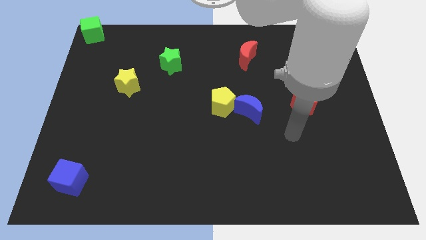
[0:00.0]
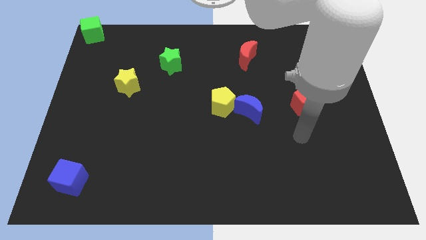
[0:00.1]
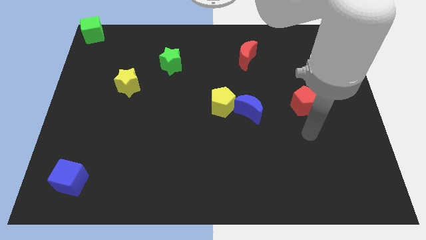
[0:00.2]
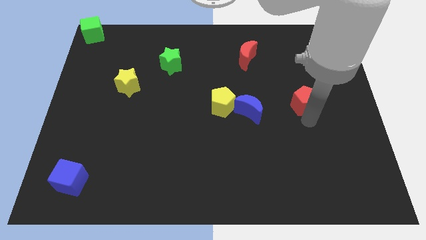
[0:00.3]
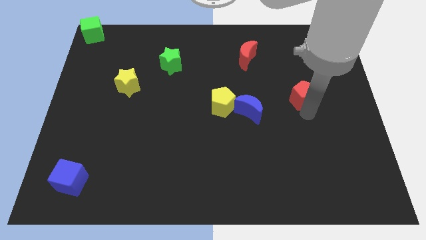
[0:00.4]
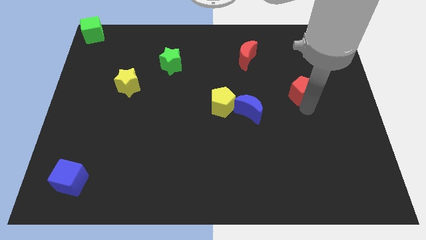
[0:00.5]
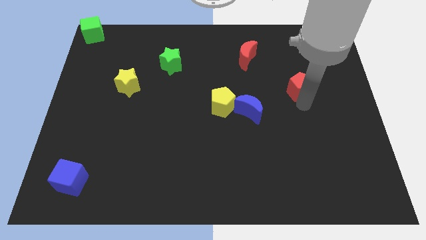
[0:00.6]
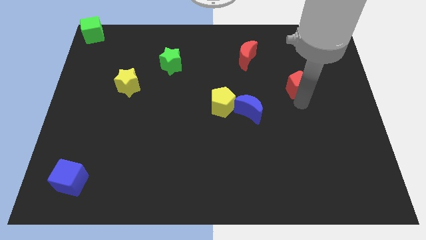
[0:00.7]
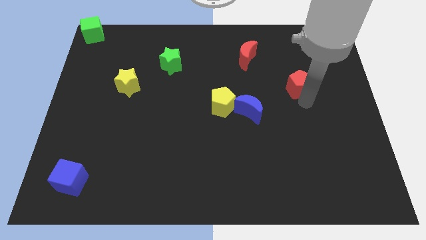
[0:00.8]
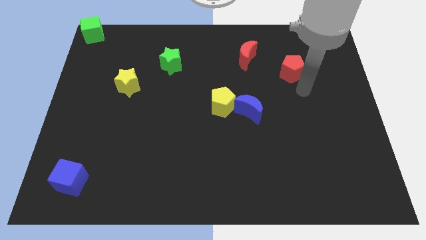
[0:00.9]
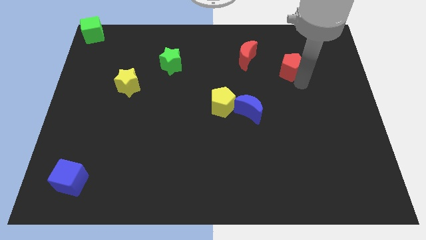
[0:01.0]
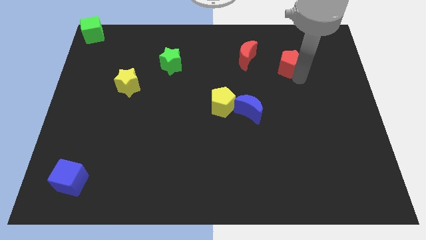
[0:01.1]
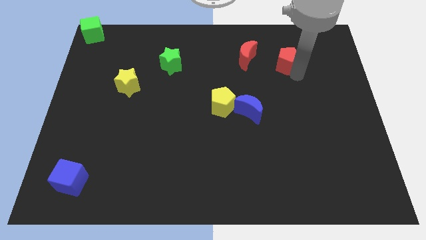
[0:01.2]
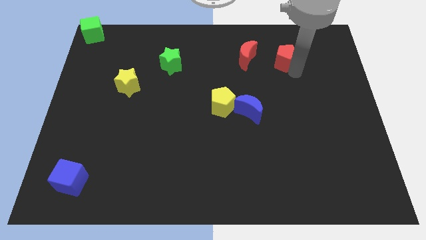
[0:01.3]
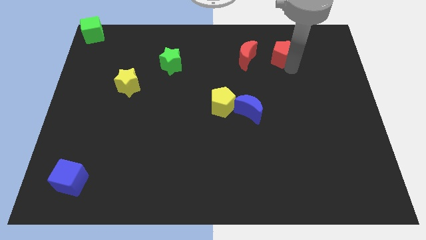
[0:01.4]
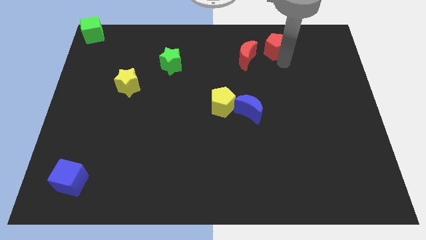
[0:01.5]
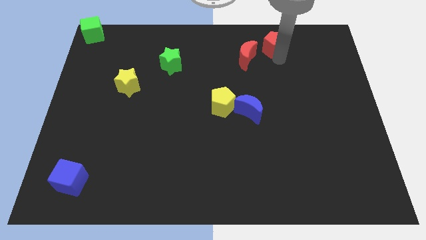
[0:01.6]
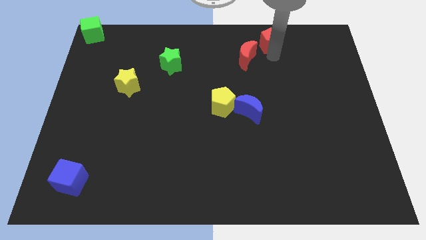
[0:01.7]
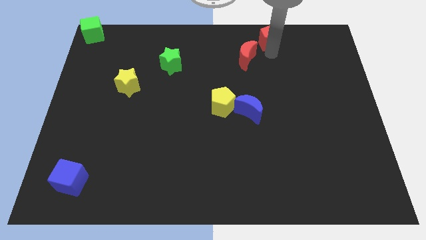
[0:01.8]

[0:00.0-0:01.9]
push the red pentagon towards the top right side of the red crescent

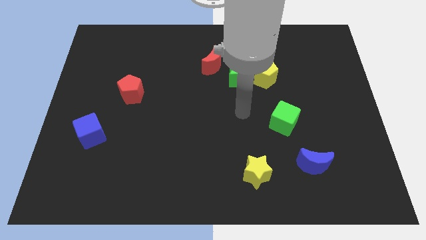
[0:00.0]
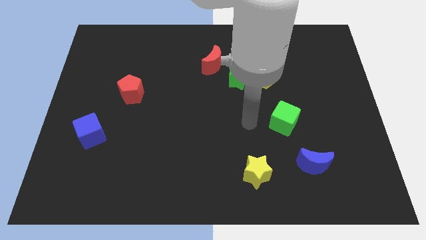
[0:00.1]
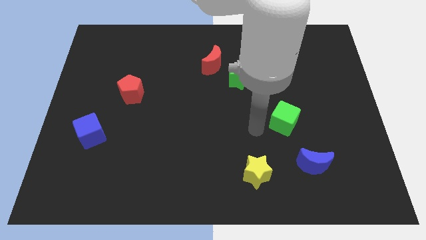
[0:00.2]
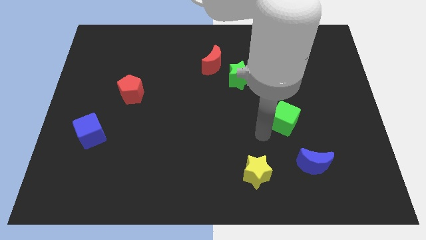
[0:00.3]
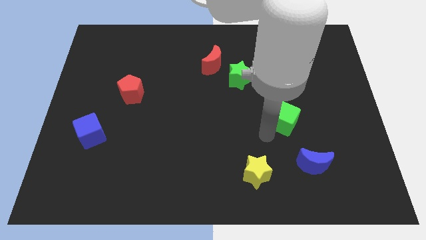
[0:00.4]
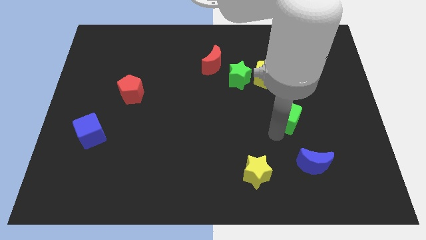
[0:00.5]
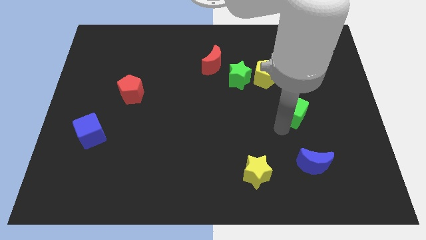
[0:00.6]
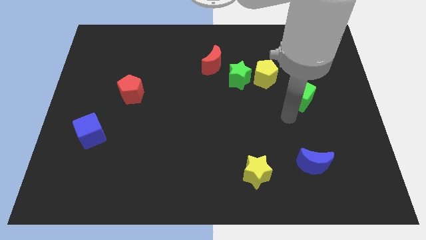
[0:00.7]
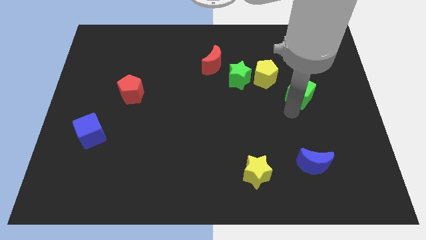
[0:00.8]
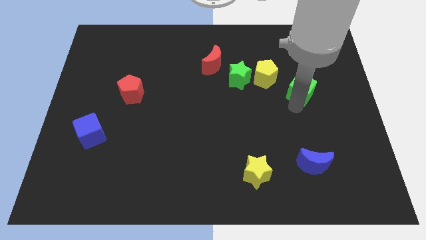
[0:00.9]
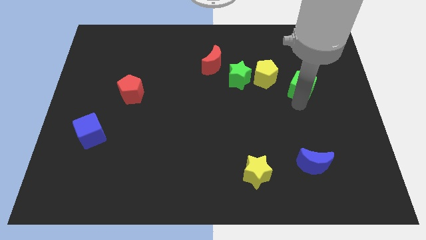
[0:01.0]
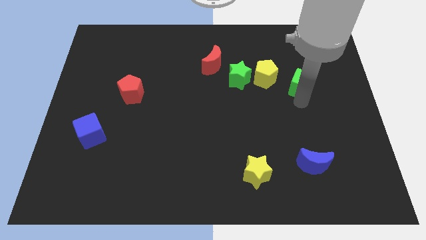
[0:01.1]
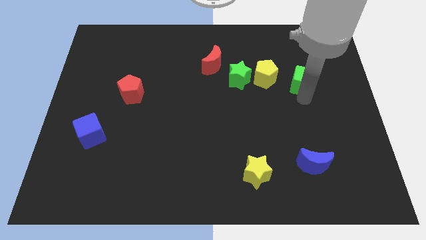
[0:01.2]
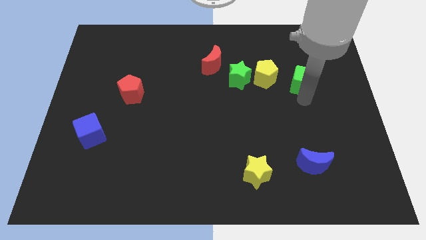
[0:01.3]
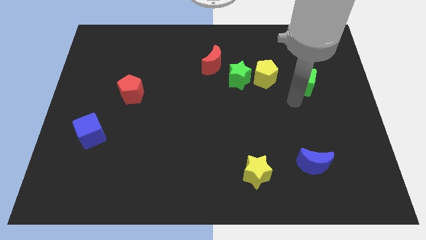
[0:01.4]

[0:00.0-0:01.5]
push the green cube upwards

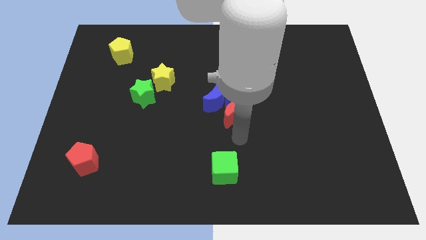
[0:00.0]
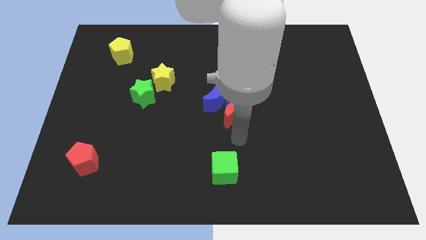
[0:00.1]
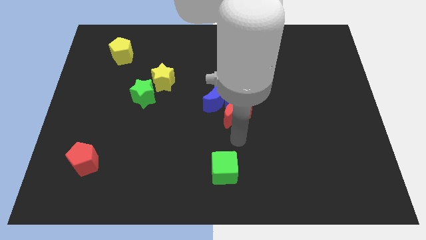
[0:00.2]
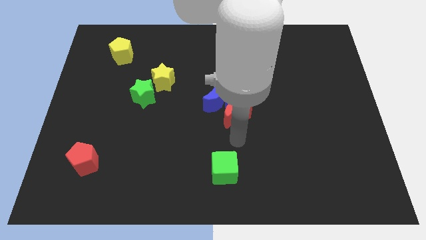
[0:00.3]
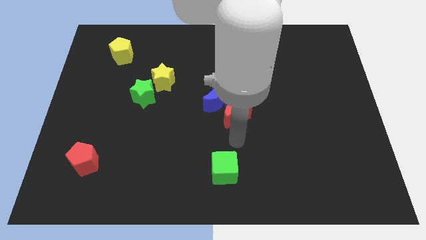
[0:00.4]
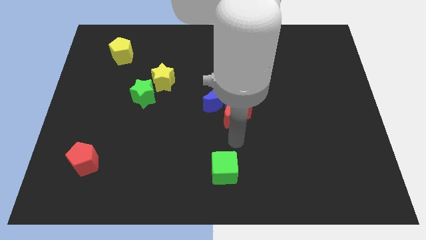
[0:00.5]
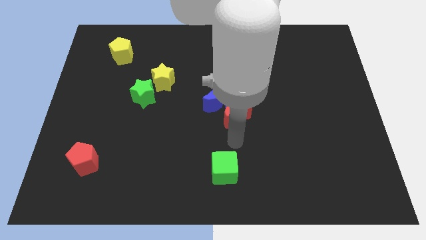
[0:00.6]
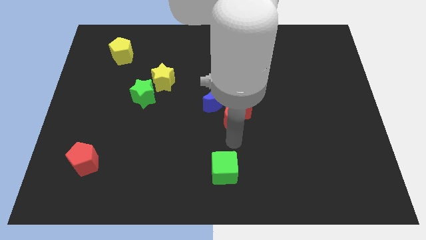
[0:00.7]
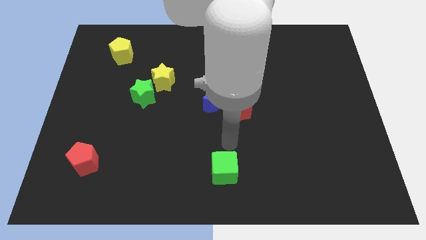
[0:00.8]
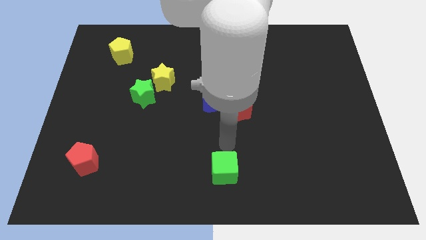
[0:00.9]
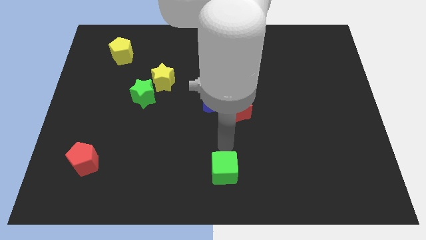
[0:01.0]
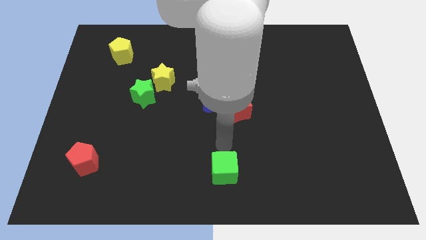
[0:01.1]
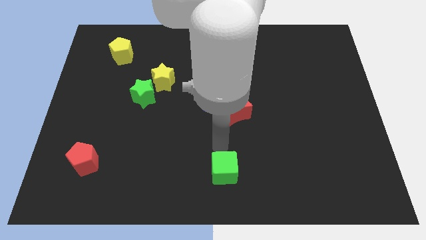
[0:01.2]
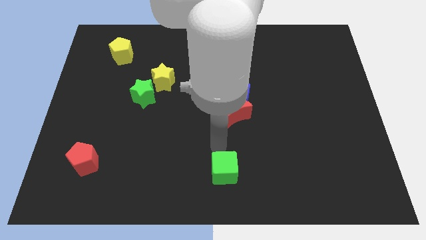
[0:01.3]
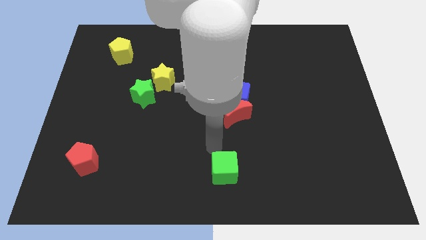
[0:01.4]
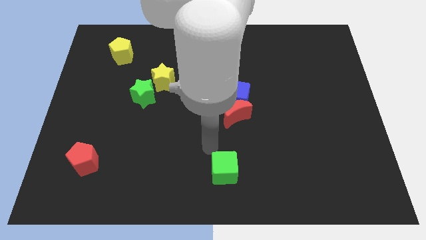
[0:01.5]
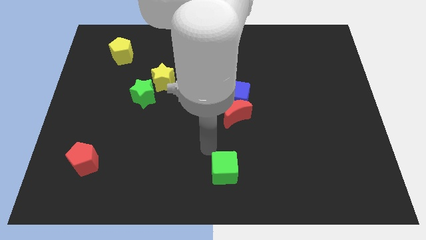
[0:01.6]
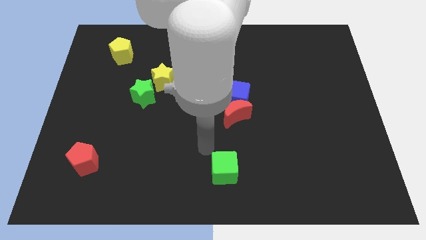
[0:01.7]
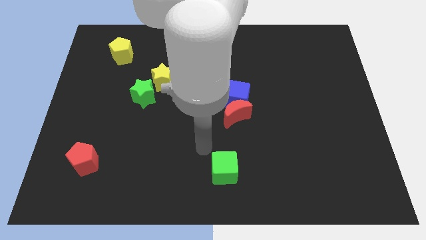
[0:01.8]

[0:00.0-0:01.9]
point your arm at the top left side of the green cube

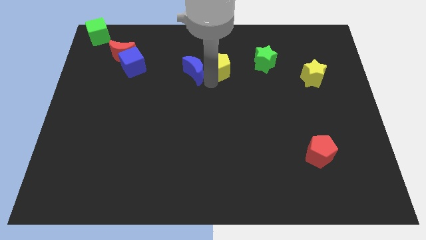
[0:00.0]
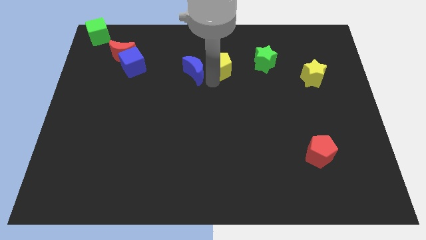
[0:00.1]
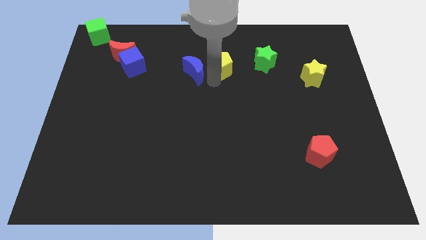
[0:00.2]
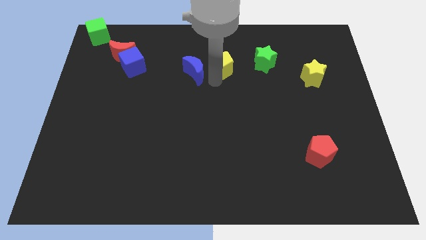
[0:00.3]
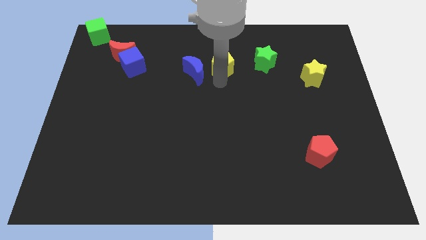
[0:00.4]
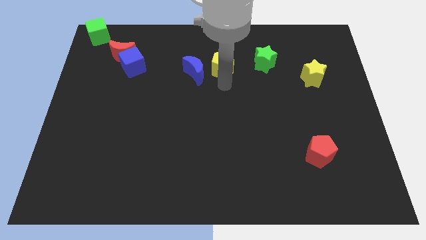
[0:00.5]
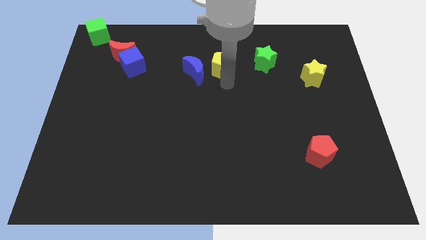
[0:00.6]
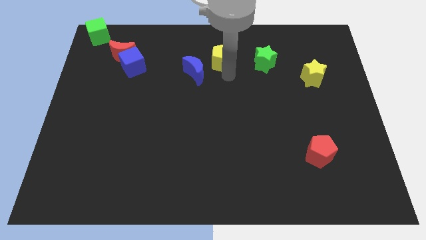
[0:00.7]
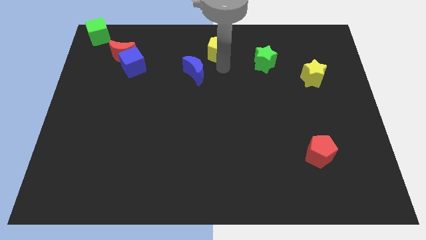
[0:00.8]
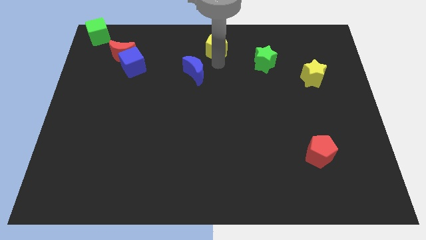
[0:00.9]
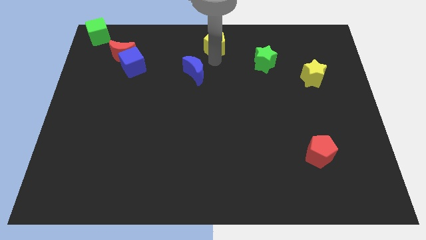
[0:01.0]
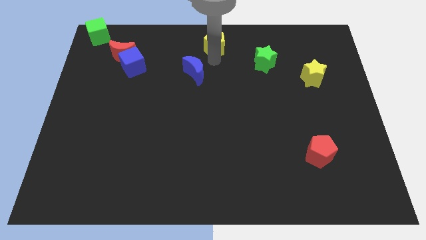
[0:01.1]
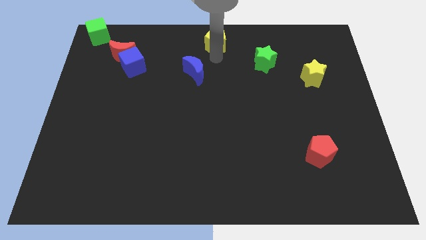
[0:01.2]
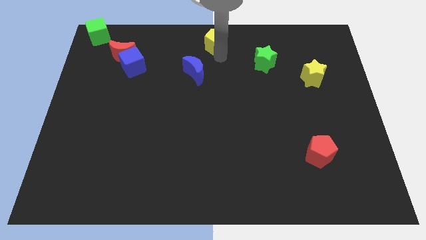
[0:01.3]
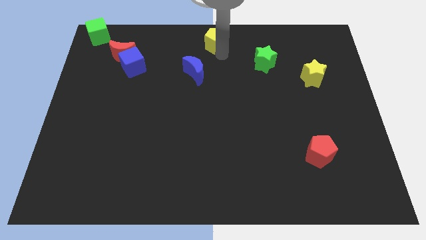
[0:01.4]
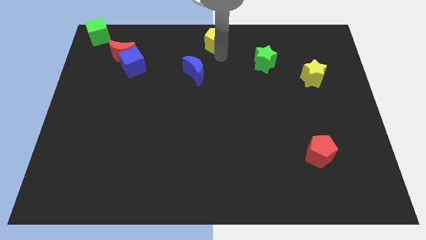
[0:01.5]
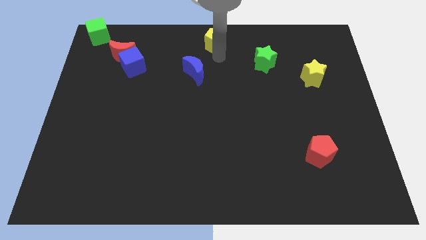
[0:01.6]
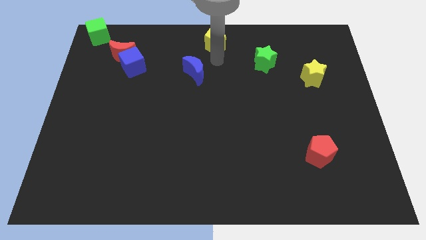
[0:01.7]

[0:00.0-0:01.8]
push the yellow pentagon on top center of the board

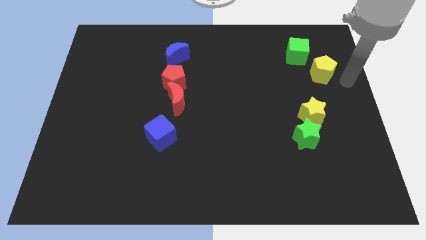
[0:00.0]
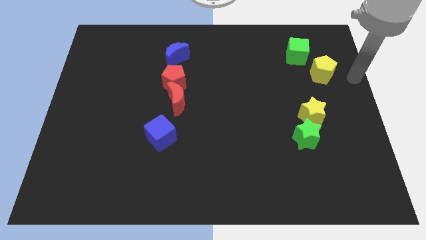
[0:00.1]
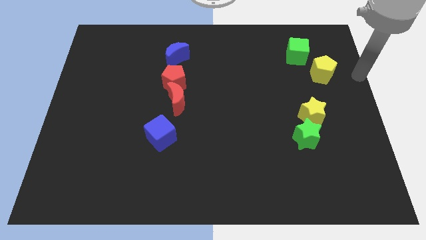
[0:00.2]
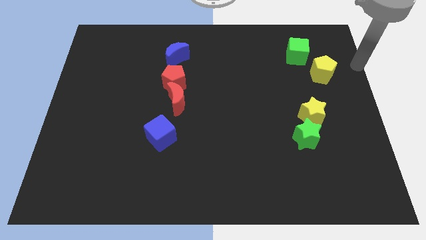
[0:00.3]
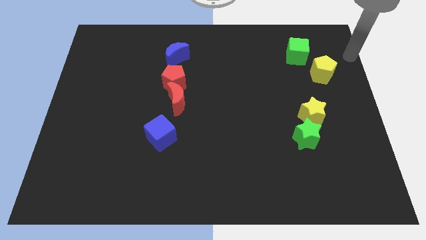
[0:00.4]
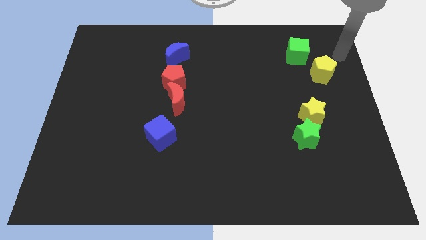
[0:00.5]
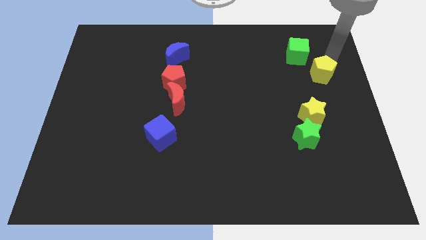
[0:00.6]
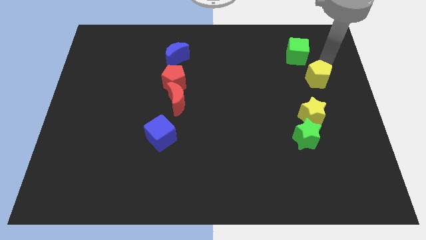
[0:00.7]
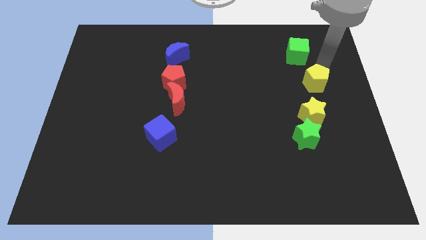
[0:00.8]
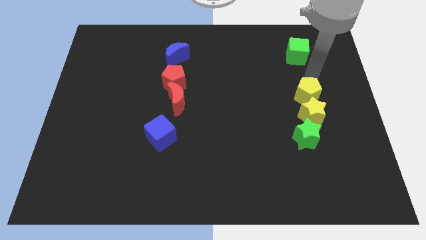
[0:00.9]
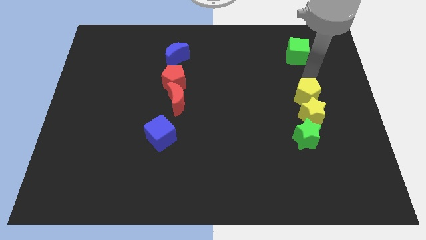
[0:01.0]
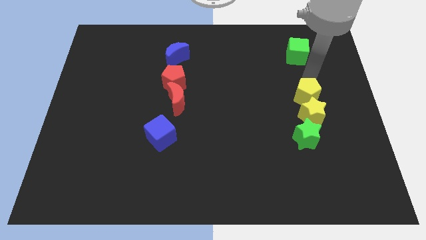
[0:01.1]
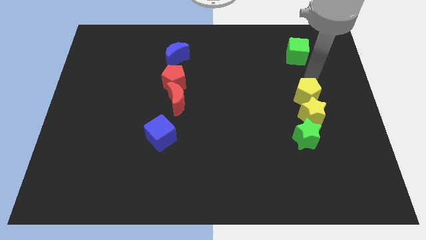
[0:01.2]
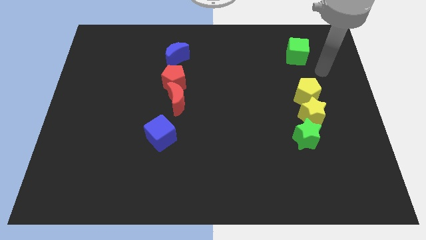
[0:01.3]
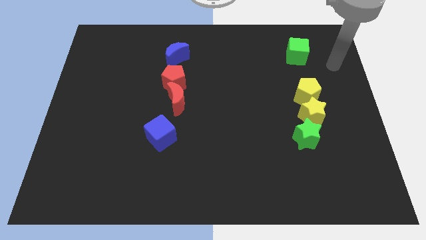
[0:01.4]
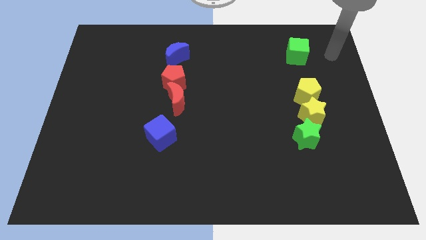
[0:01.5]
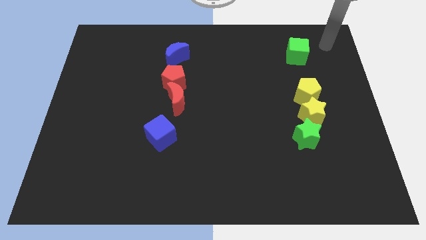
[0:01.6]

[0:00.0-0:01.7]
move yellow pentagon close to the yellow star
